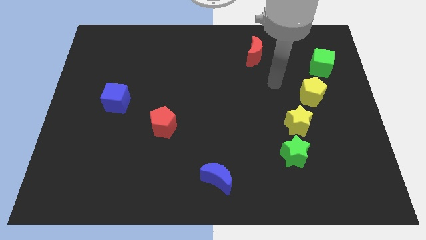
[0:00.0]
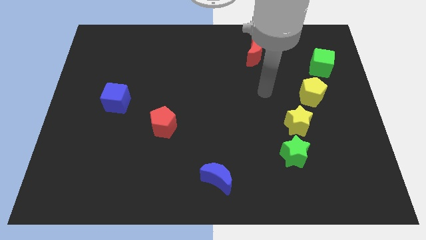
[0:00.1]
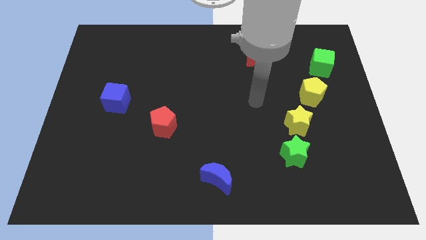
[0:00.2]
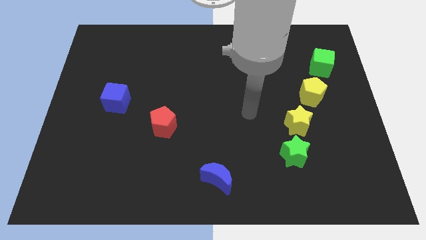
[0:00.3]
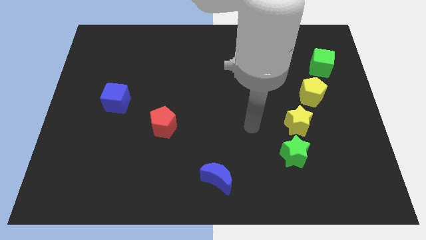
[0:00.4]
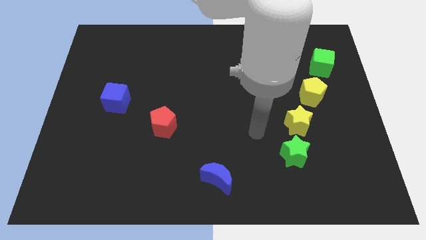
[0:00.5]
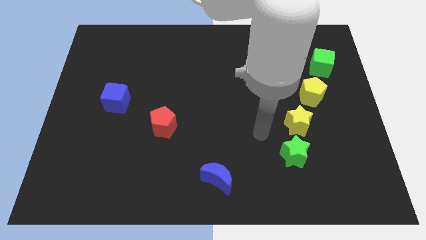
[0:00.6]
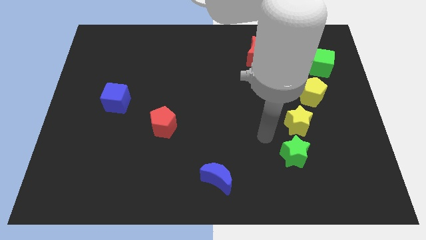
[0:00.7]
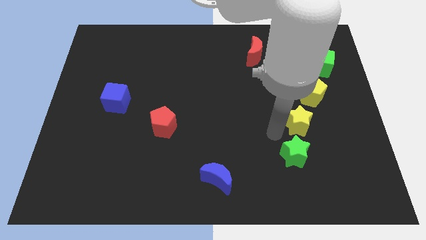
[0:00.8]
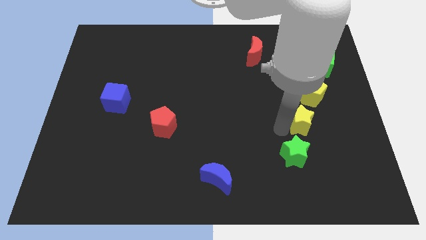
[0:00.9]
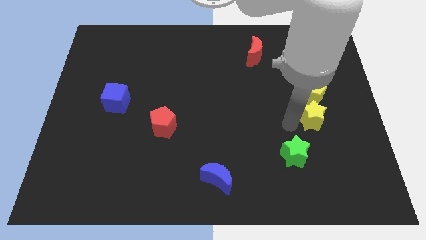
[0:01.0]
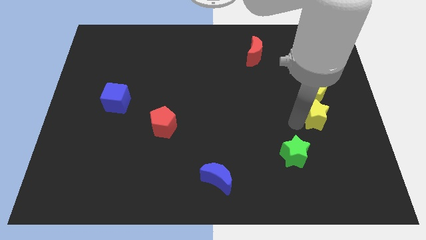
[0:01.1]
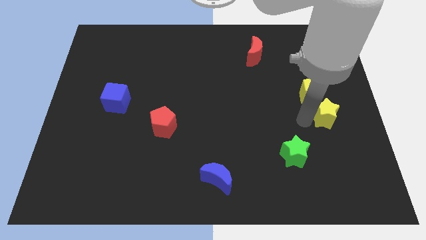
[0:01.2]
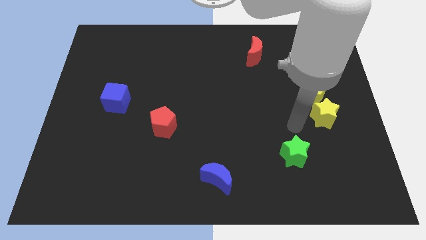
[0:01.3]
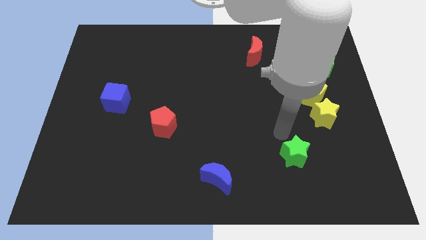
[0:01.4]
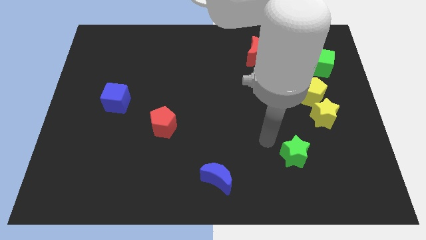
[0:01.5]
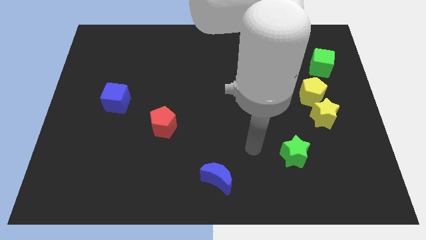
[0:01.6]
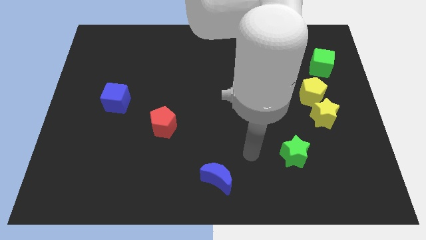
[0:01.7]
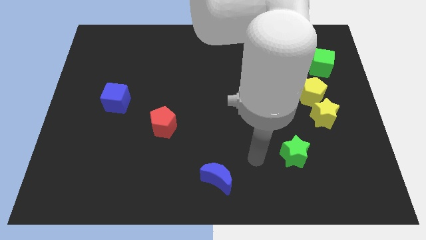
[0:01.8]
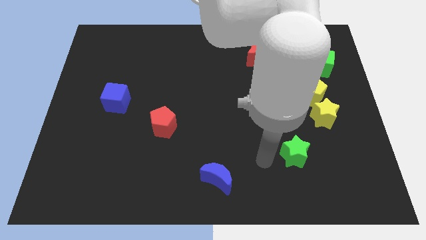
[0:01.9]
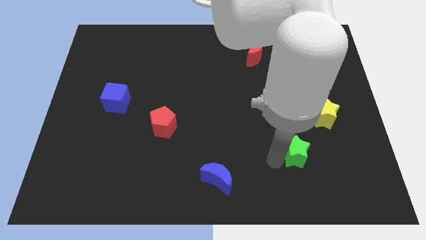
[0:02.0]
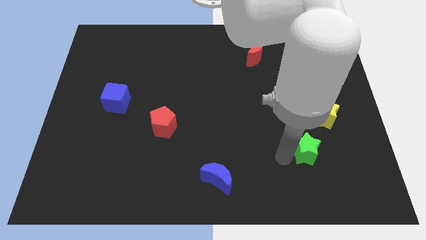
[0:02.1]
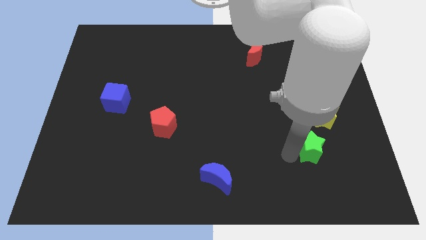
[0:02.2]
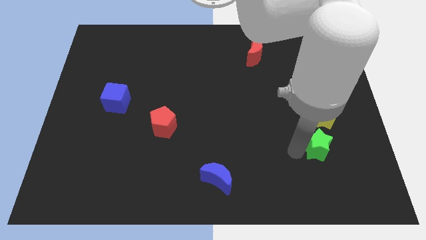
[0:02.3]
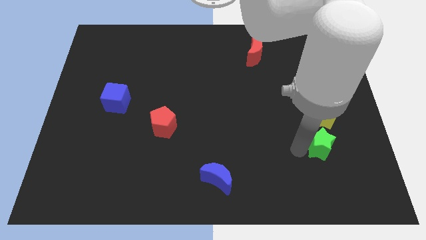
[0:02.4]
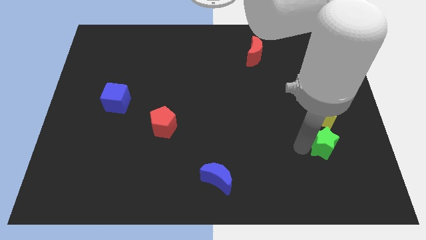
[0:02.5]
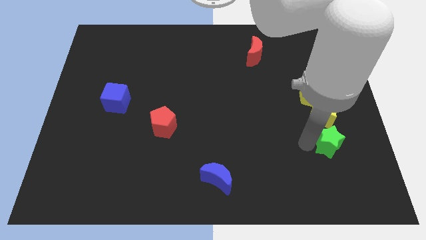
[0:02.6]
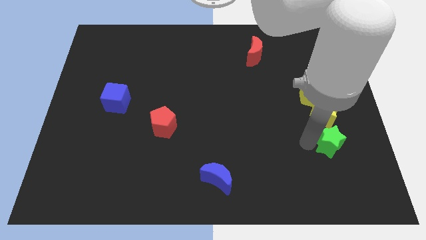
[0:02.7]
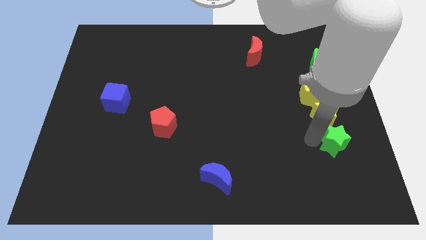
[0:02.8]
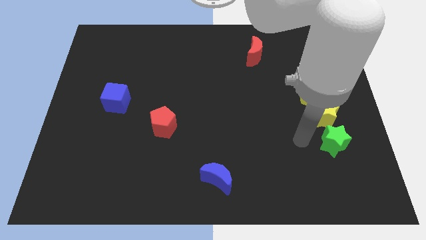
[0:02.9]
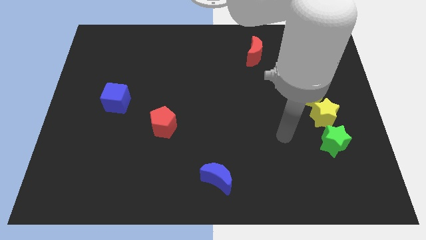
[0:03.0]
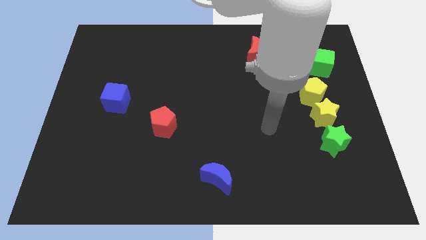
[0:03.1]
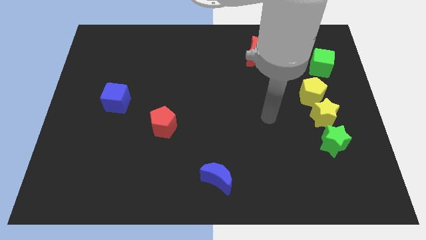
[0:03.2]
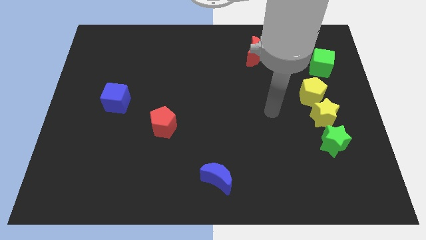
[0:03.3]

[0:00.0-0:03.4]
place the yellow star and green star in a vertical line below the yellow pentagon

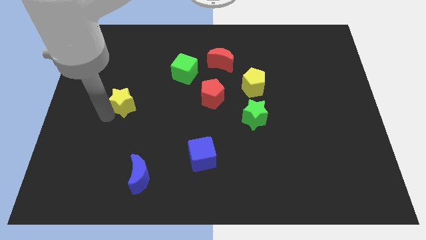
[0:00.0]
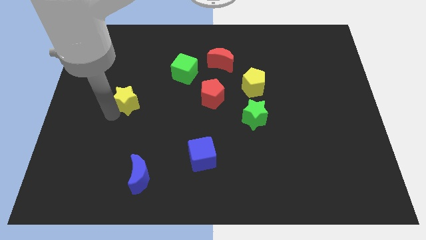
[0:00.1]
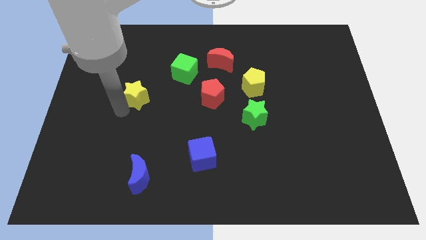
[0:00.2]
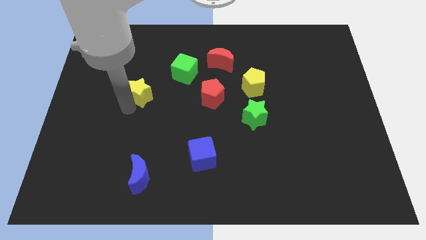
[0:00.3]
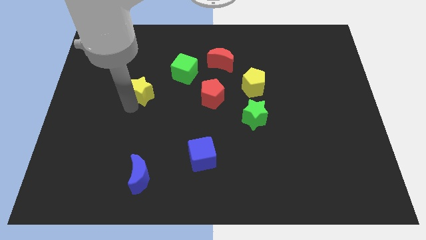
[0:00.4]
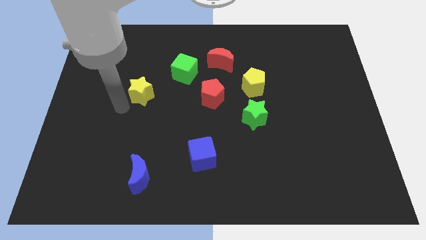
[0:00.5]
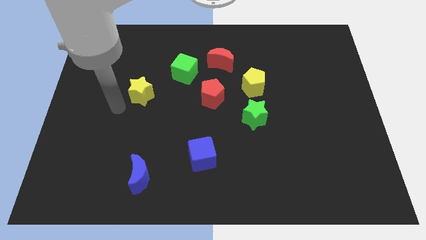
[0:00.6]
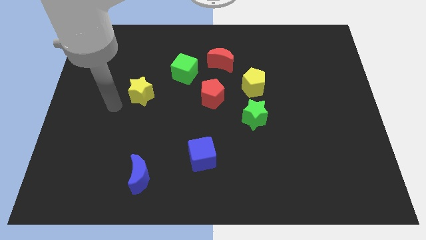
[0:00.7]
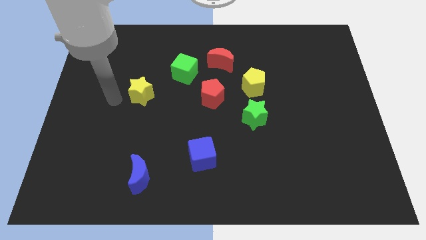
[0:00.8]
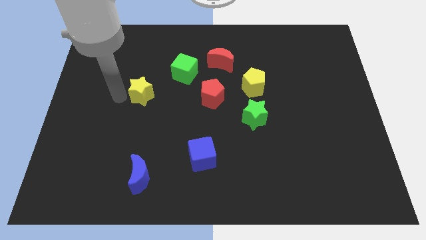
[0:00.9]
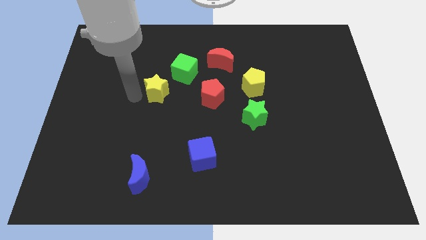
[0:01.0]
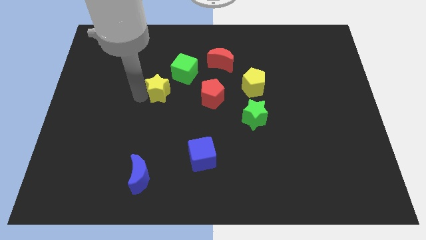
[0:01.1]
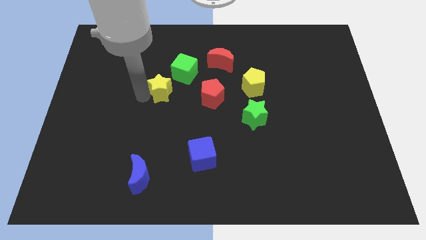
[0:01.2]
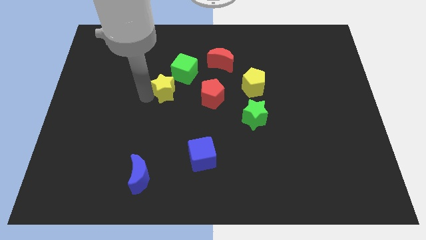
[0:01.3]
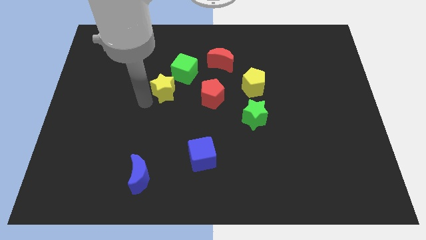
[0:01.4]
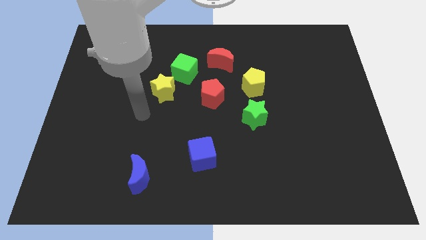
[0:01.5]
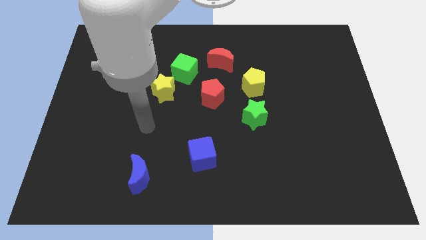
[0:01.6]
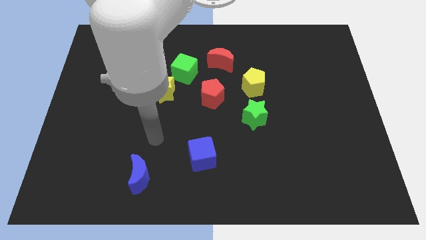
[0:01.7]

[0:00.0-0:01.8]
push the yellow star diagonally to the bottom left to the green cube

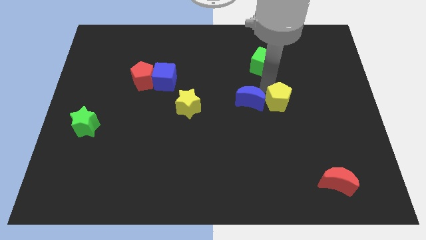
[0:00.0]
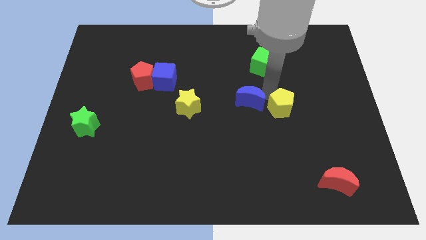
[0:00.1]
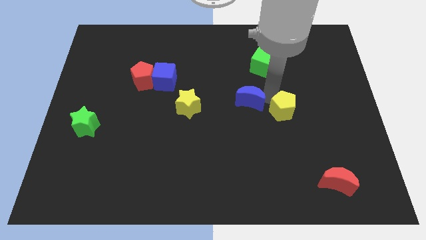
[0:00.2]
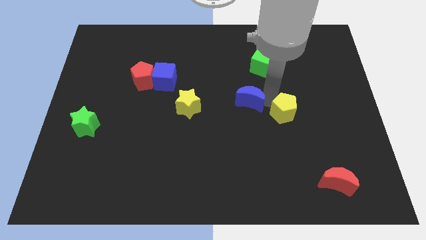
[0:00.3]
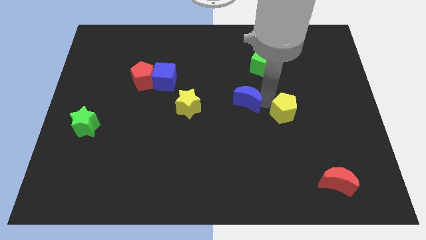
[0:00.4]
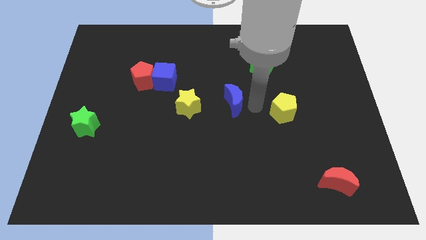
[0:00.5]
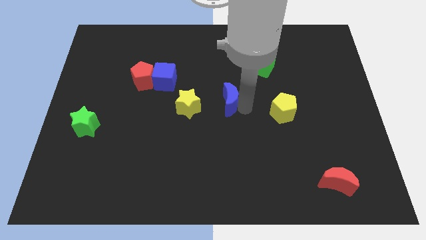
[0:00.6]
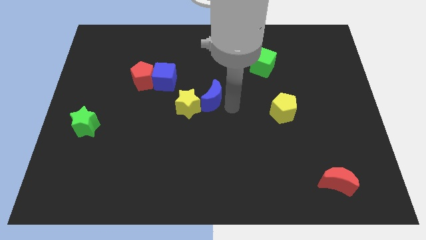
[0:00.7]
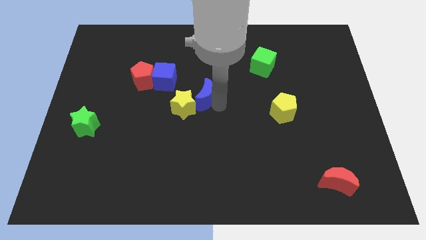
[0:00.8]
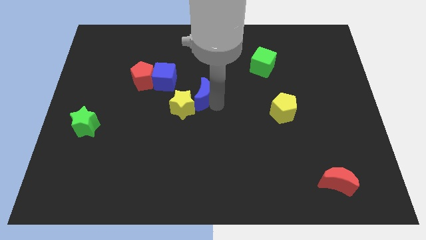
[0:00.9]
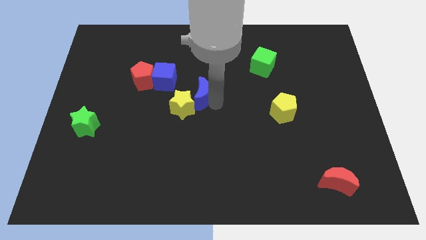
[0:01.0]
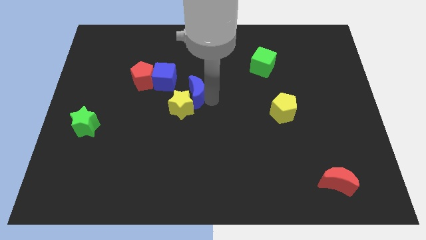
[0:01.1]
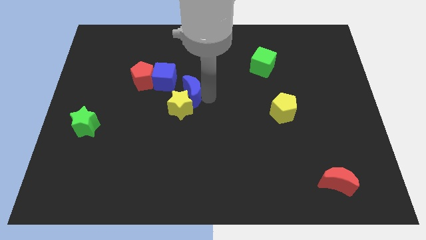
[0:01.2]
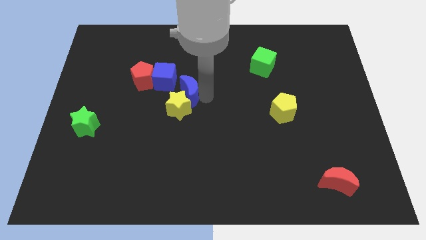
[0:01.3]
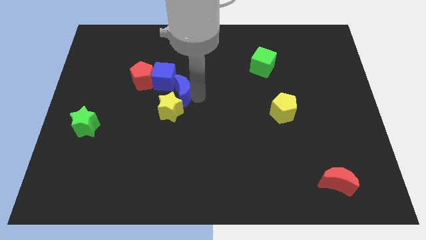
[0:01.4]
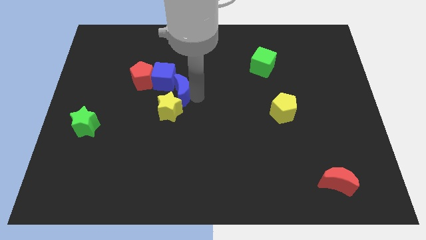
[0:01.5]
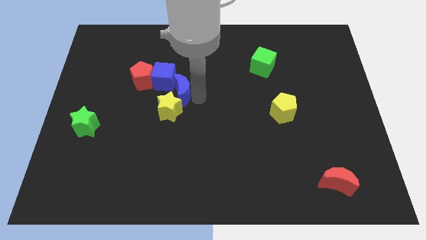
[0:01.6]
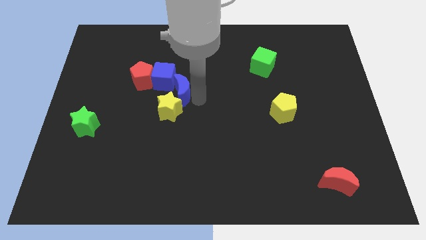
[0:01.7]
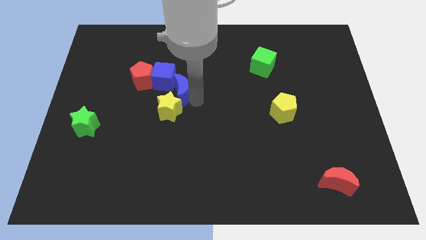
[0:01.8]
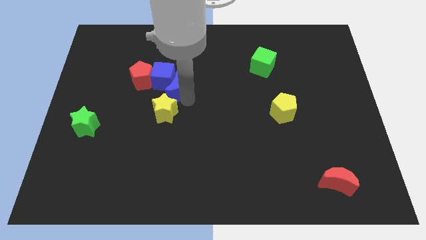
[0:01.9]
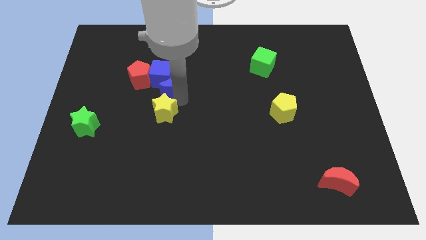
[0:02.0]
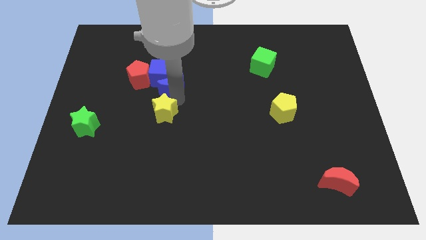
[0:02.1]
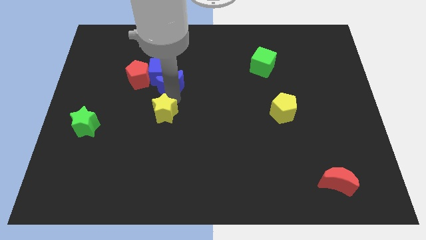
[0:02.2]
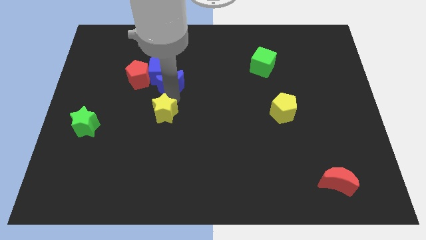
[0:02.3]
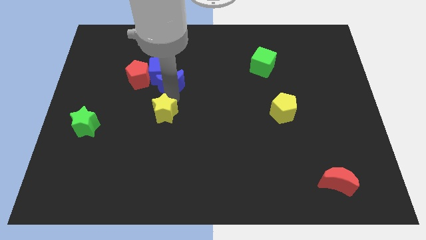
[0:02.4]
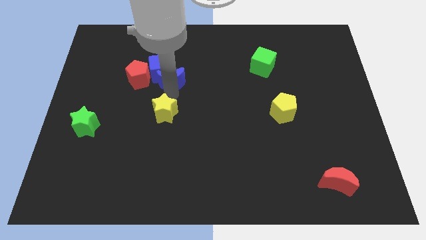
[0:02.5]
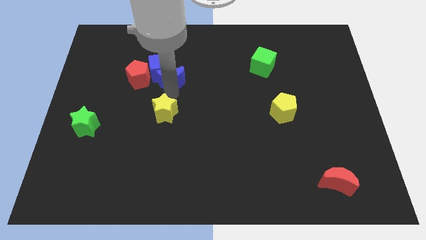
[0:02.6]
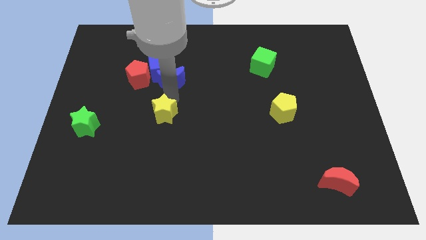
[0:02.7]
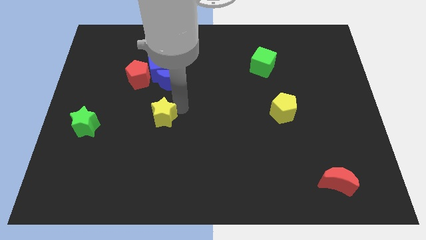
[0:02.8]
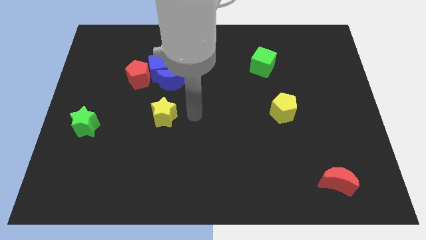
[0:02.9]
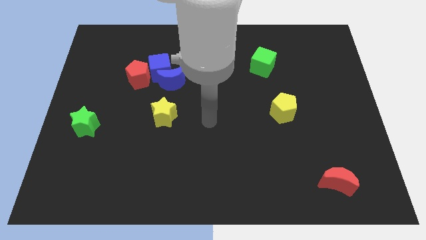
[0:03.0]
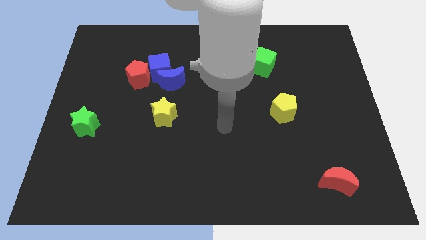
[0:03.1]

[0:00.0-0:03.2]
move blue moon into the blue cube

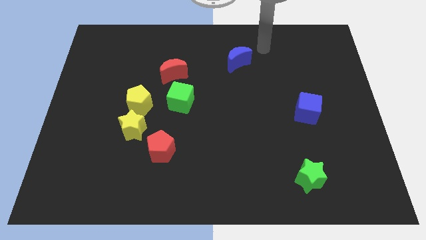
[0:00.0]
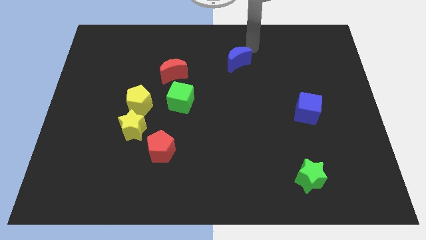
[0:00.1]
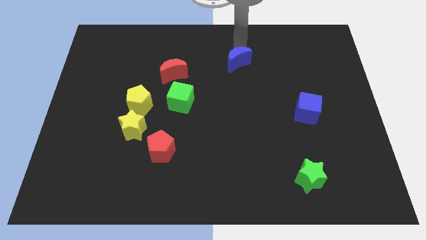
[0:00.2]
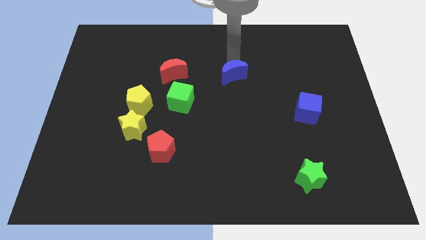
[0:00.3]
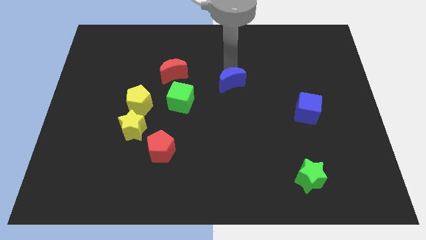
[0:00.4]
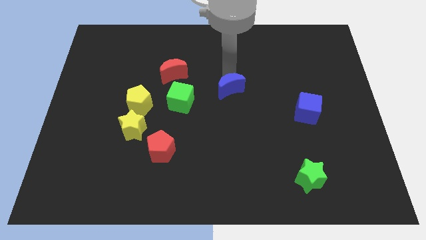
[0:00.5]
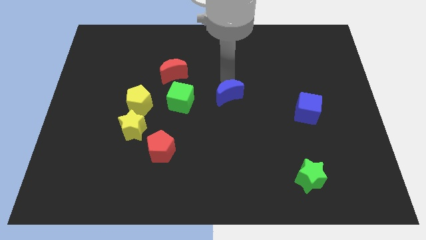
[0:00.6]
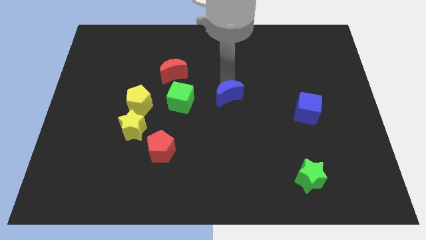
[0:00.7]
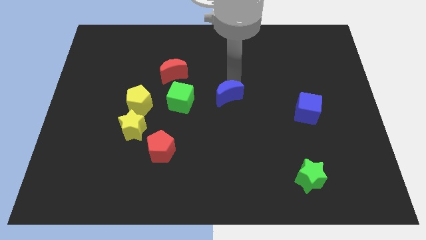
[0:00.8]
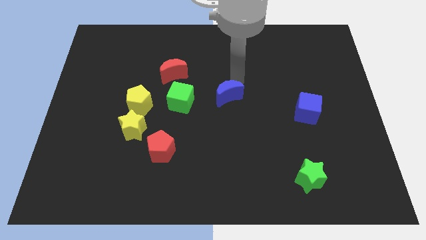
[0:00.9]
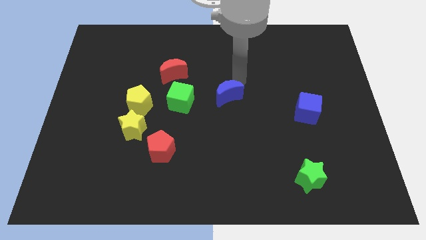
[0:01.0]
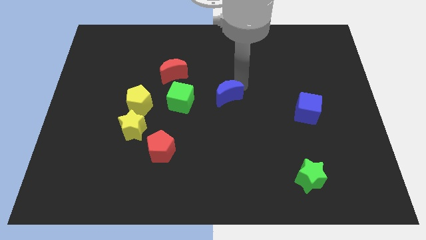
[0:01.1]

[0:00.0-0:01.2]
move blue moon towards bottom of the board
